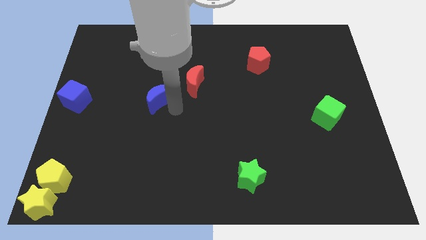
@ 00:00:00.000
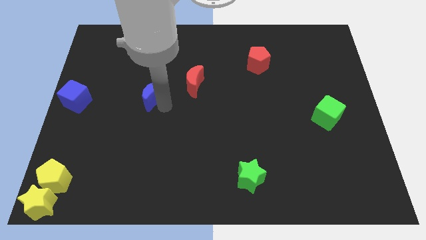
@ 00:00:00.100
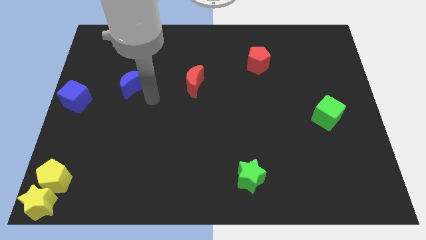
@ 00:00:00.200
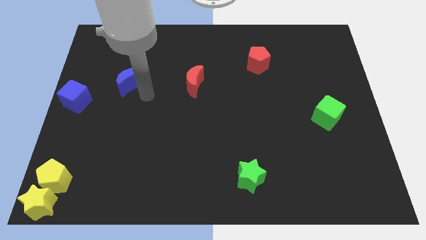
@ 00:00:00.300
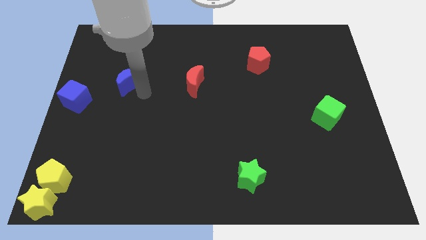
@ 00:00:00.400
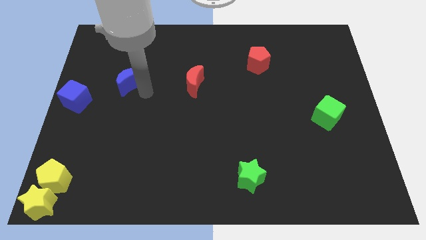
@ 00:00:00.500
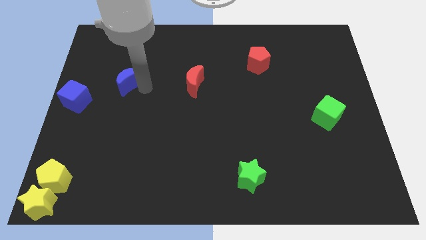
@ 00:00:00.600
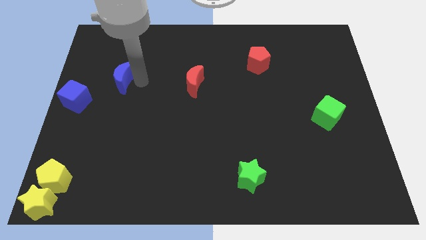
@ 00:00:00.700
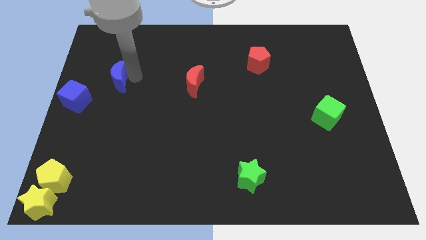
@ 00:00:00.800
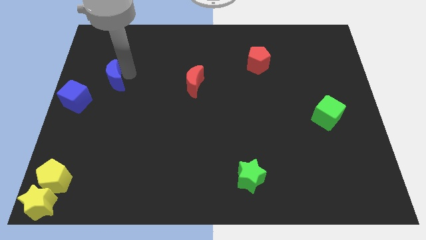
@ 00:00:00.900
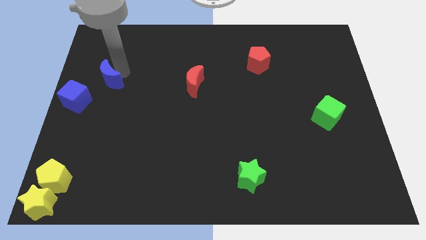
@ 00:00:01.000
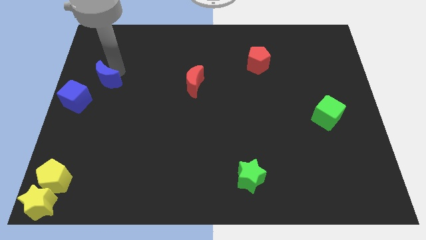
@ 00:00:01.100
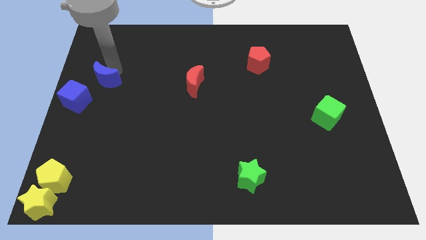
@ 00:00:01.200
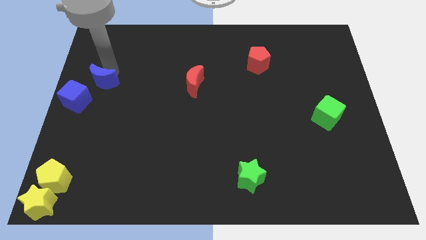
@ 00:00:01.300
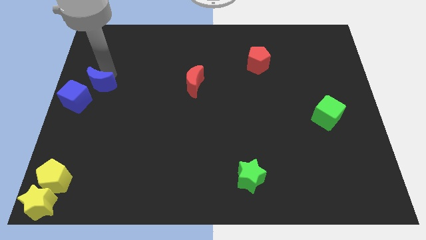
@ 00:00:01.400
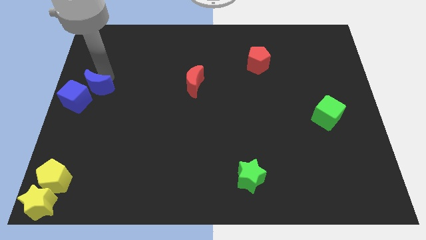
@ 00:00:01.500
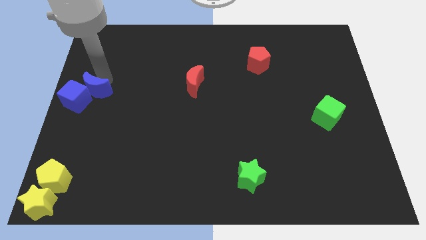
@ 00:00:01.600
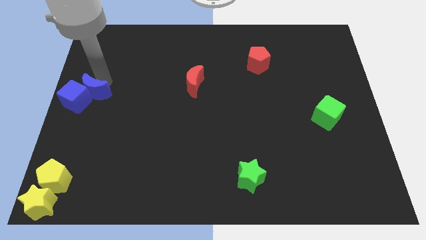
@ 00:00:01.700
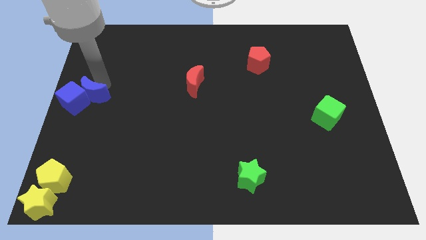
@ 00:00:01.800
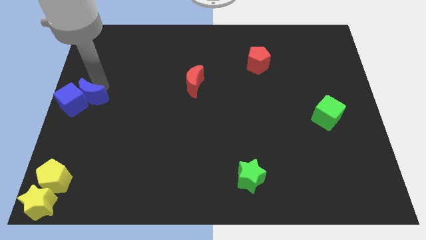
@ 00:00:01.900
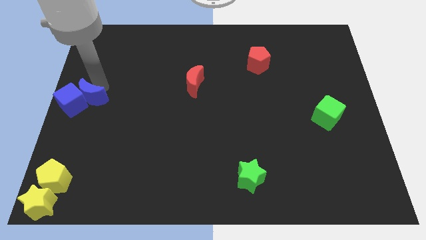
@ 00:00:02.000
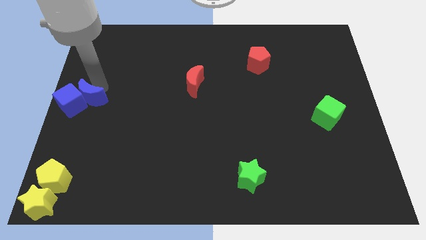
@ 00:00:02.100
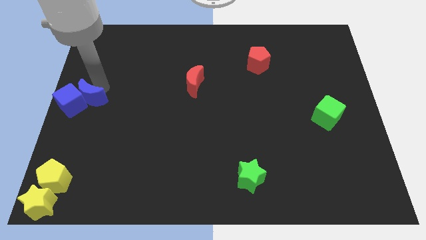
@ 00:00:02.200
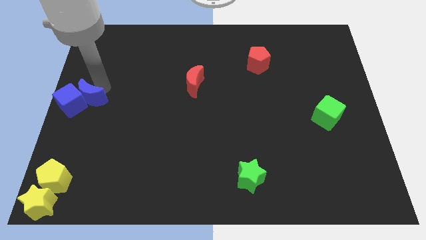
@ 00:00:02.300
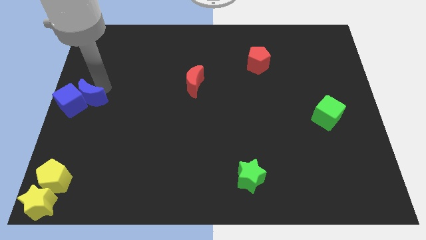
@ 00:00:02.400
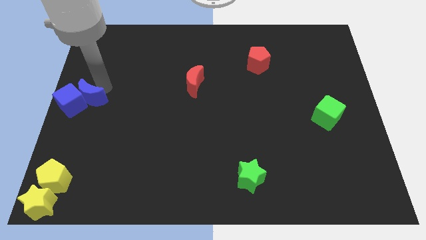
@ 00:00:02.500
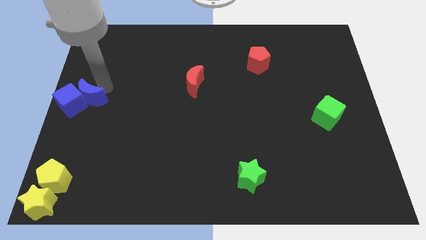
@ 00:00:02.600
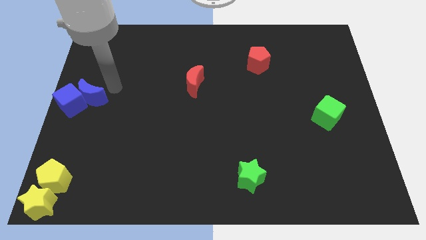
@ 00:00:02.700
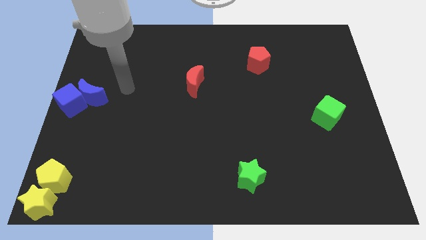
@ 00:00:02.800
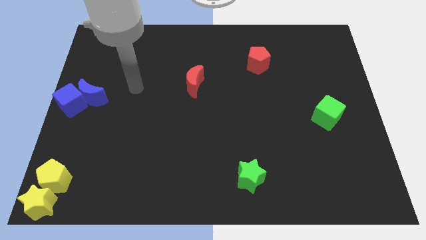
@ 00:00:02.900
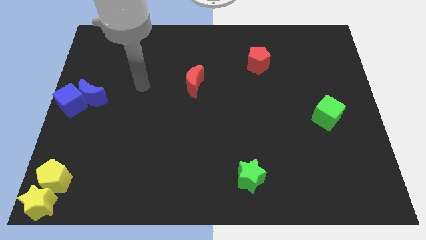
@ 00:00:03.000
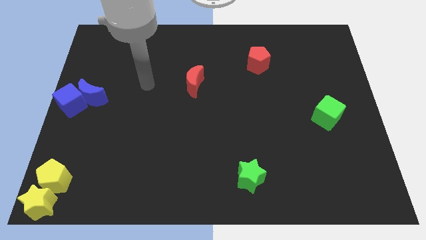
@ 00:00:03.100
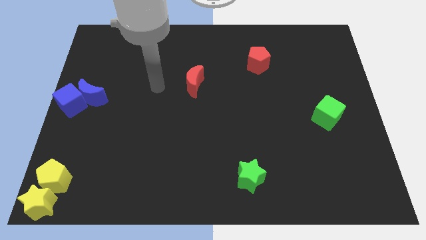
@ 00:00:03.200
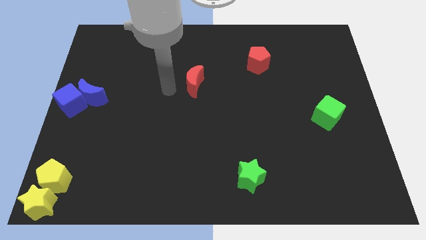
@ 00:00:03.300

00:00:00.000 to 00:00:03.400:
push the blue moon into the blue cube

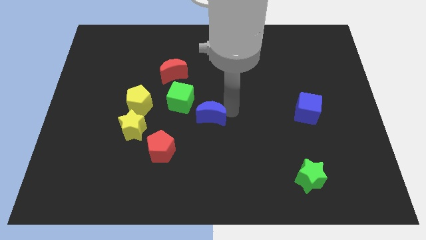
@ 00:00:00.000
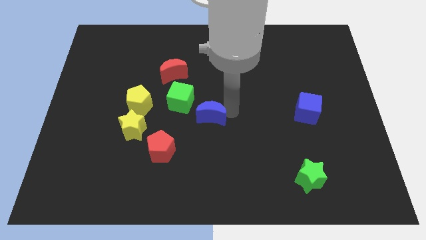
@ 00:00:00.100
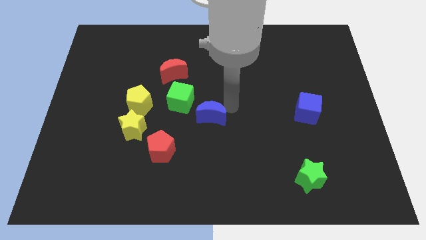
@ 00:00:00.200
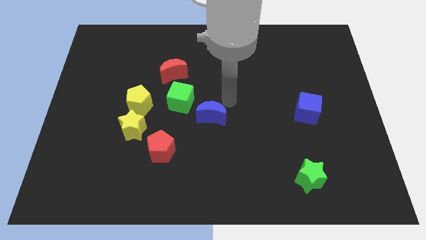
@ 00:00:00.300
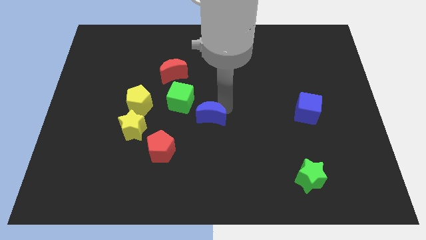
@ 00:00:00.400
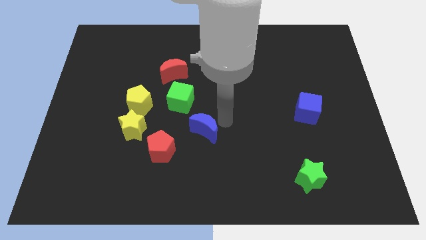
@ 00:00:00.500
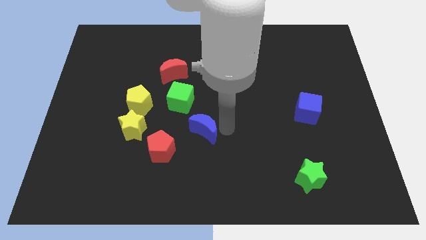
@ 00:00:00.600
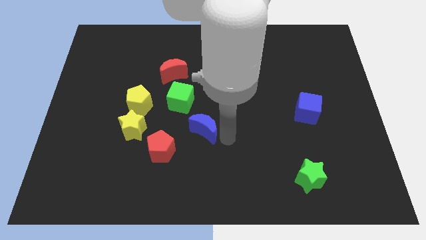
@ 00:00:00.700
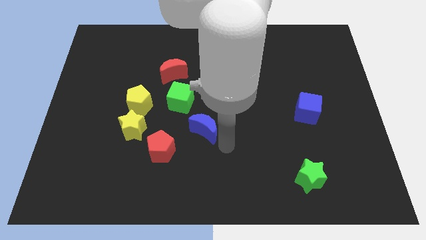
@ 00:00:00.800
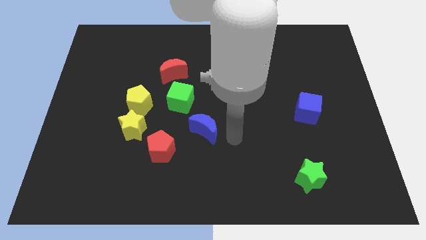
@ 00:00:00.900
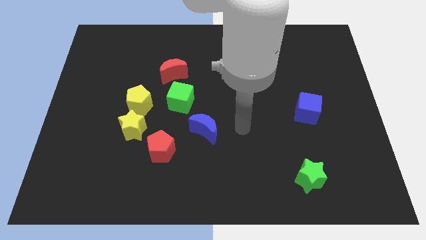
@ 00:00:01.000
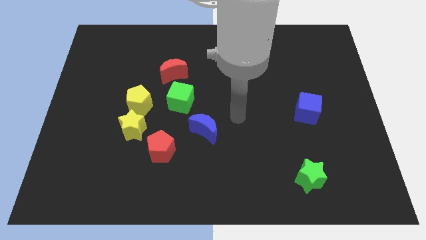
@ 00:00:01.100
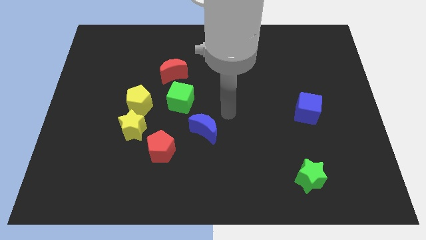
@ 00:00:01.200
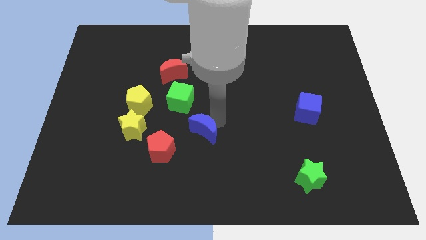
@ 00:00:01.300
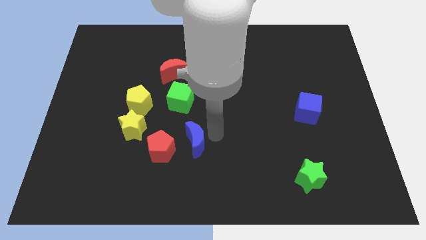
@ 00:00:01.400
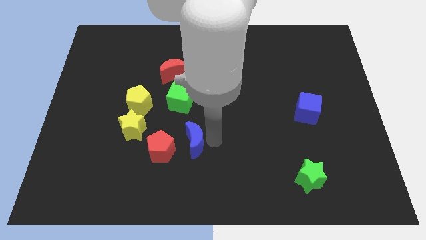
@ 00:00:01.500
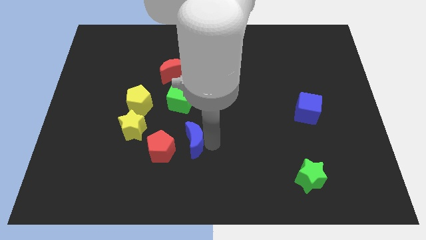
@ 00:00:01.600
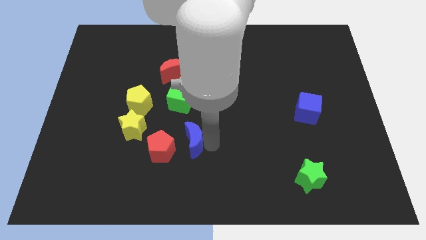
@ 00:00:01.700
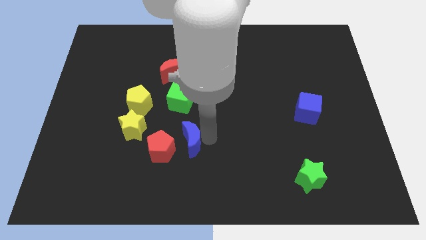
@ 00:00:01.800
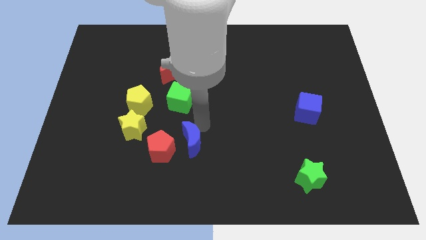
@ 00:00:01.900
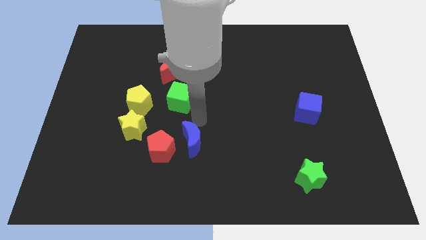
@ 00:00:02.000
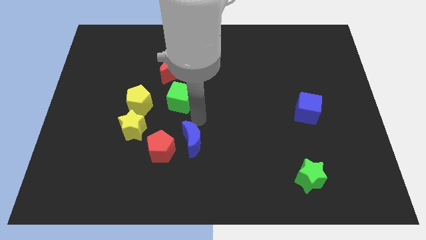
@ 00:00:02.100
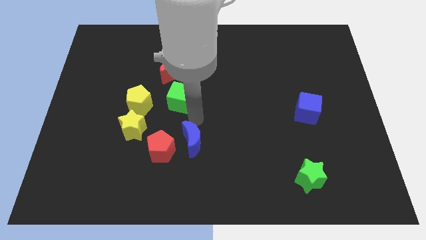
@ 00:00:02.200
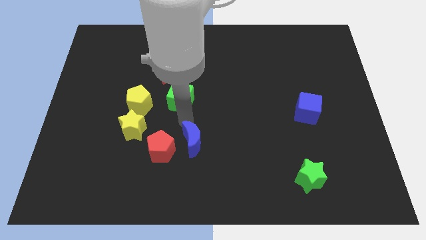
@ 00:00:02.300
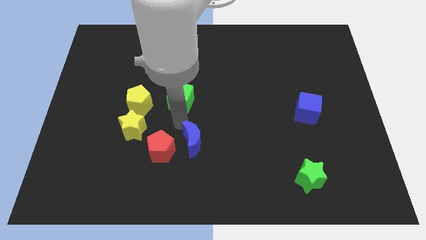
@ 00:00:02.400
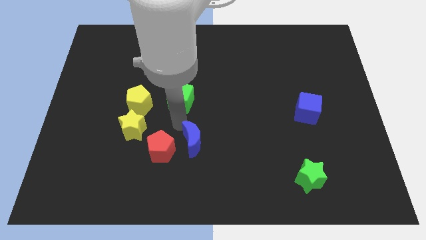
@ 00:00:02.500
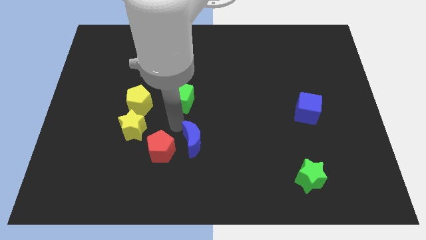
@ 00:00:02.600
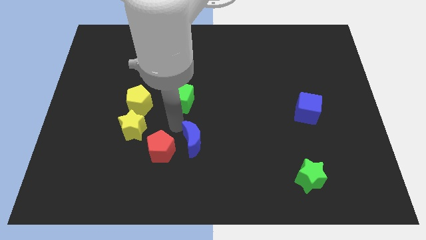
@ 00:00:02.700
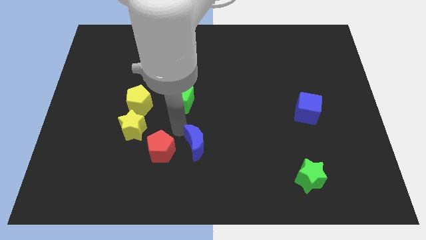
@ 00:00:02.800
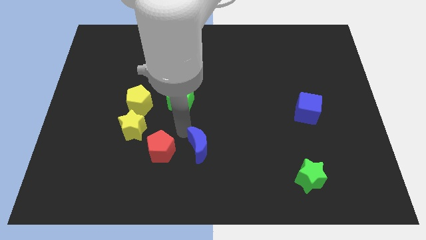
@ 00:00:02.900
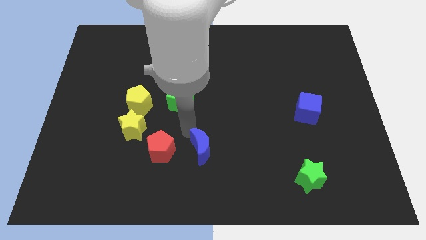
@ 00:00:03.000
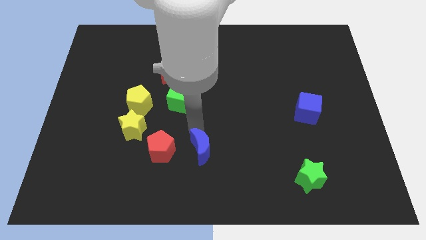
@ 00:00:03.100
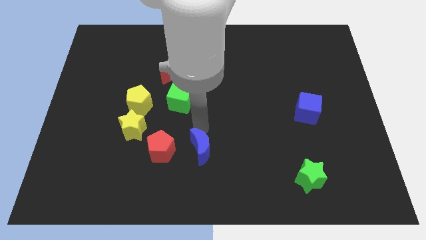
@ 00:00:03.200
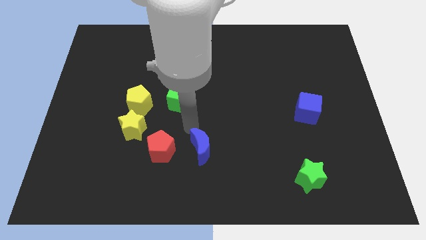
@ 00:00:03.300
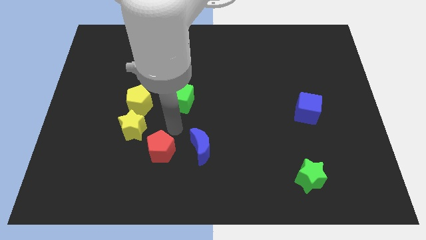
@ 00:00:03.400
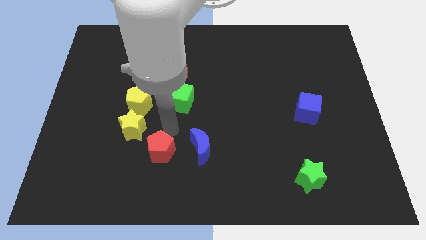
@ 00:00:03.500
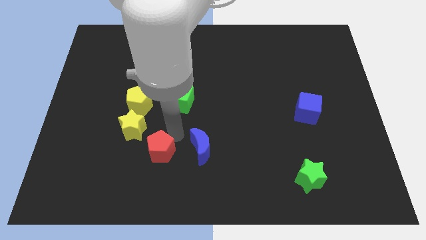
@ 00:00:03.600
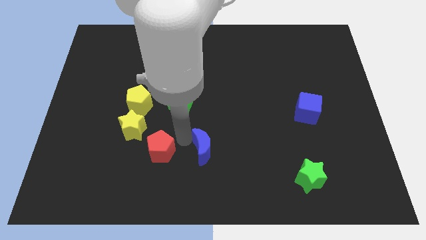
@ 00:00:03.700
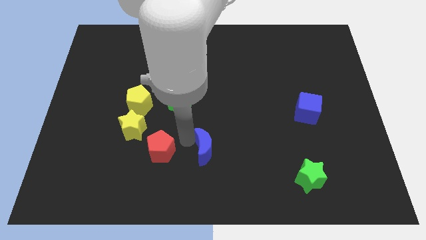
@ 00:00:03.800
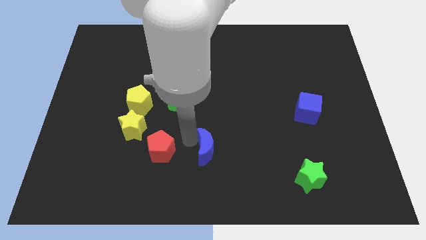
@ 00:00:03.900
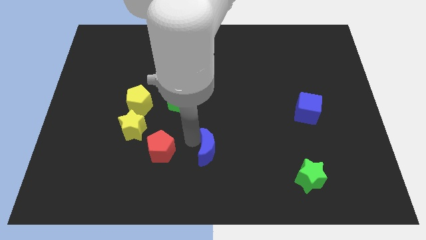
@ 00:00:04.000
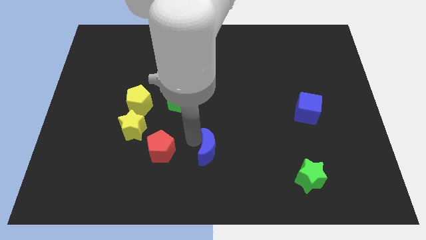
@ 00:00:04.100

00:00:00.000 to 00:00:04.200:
push the blue moon to the right side of the red pentagon

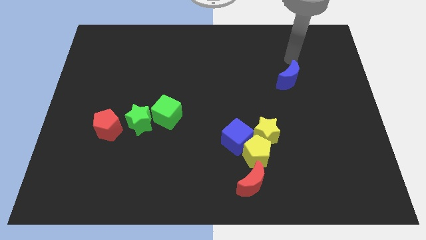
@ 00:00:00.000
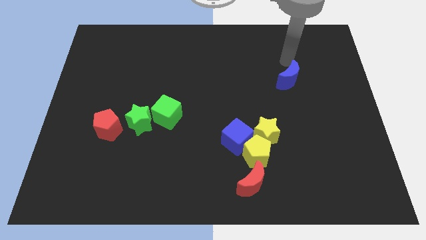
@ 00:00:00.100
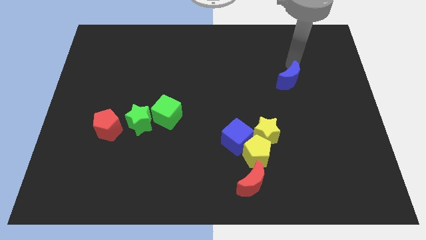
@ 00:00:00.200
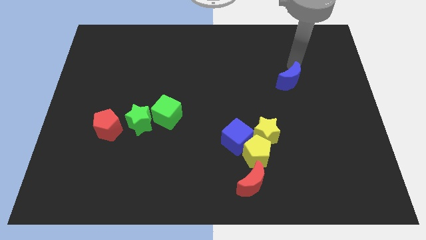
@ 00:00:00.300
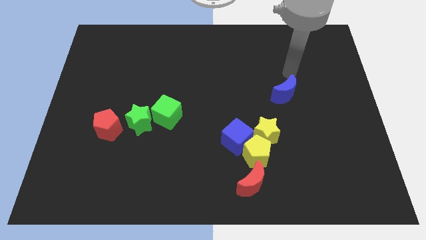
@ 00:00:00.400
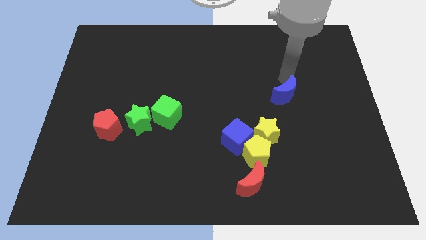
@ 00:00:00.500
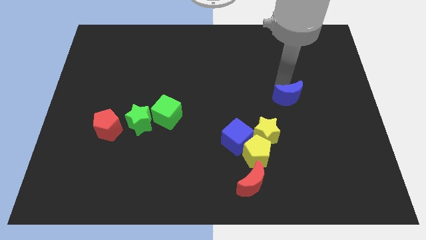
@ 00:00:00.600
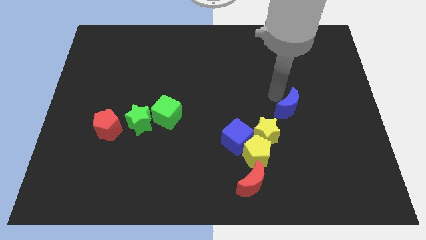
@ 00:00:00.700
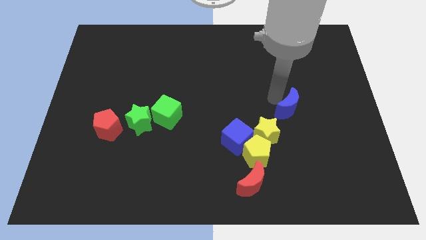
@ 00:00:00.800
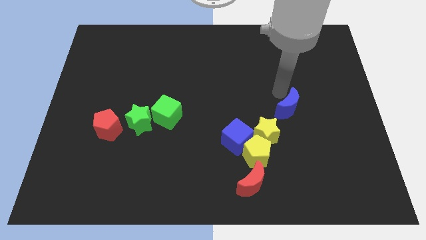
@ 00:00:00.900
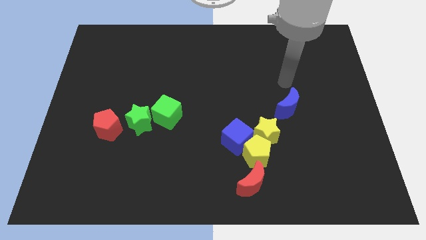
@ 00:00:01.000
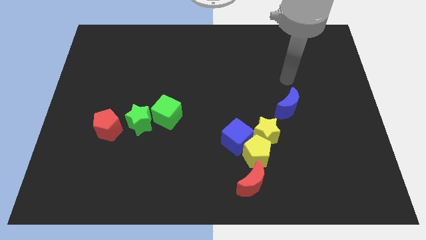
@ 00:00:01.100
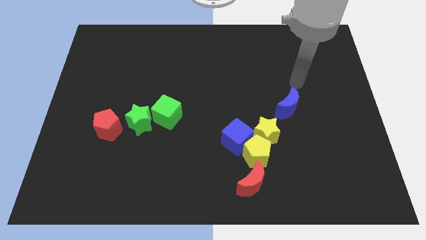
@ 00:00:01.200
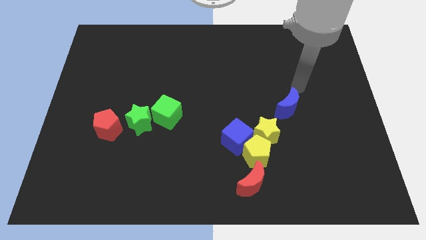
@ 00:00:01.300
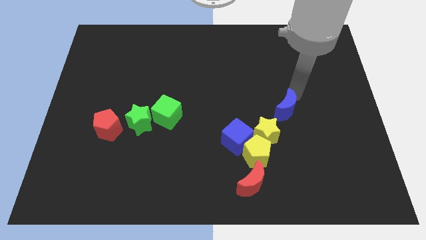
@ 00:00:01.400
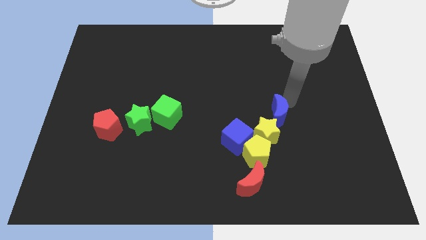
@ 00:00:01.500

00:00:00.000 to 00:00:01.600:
place blue moon on the top right of yellow star
